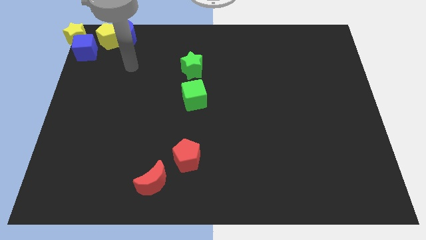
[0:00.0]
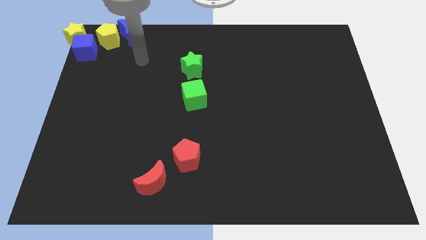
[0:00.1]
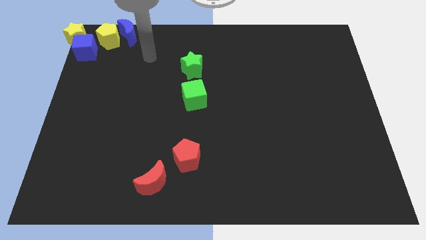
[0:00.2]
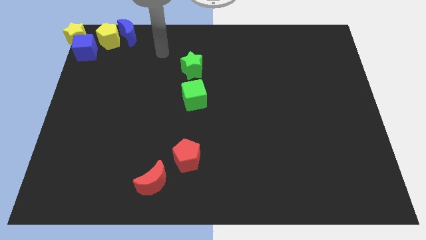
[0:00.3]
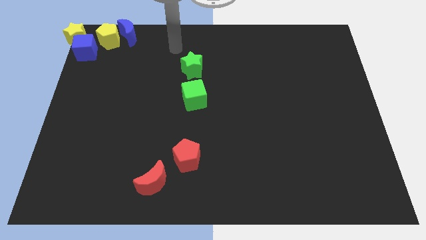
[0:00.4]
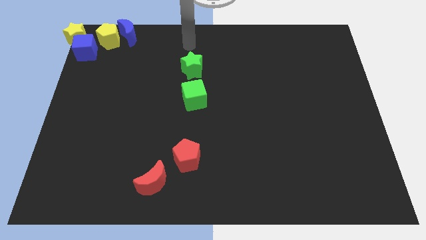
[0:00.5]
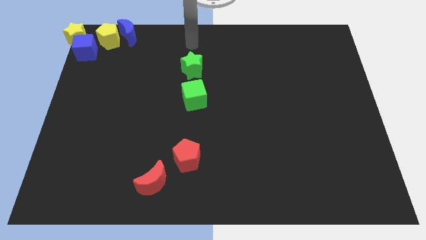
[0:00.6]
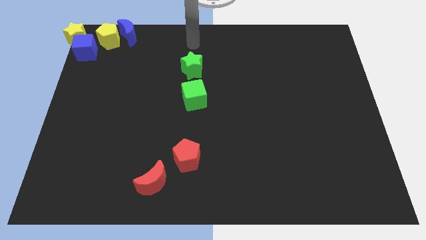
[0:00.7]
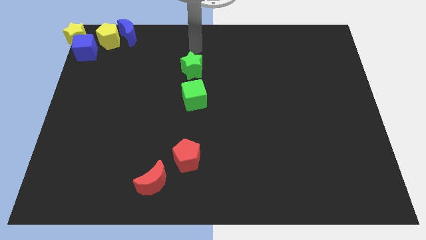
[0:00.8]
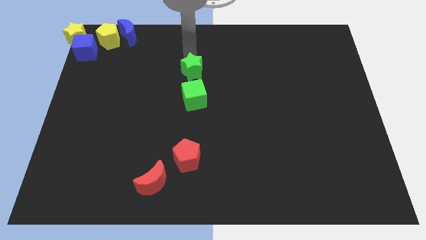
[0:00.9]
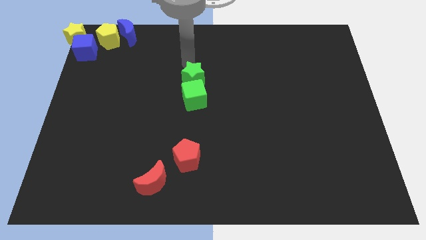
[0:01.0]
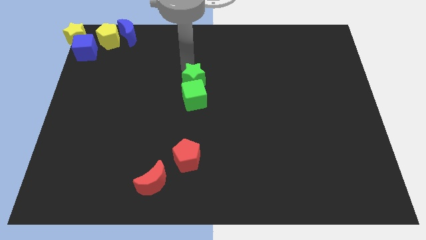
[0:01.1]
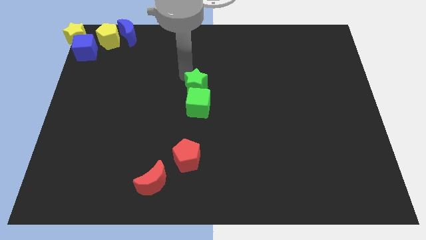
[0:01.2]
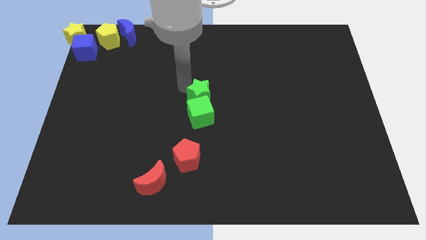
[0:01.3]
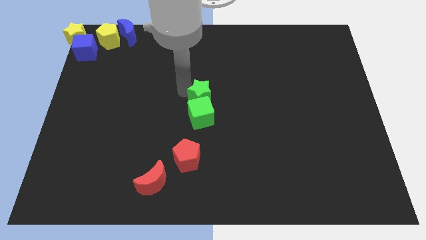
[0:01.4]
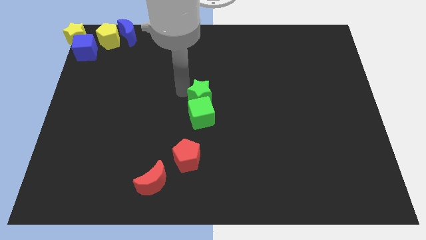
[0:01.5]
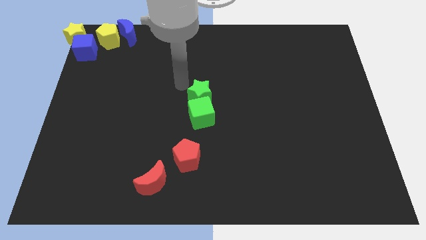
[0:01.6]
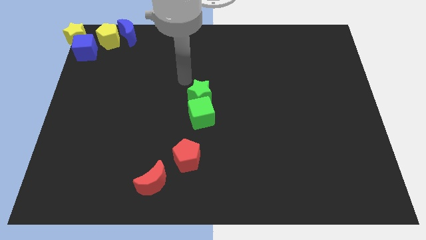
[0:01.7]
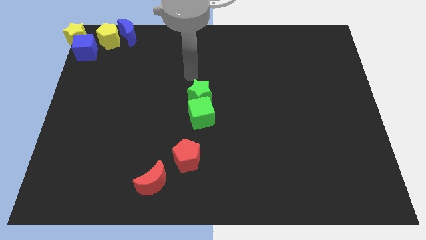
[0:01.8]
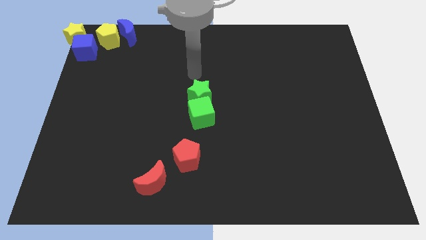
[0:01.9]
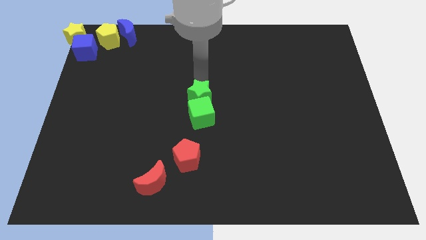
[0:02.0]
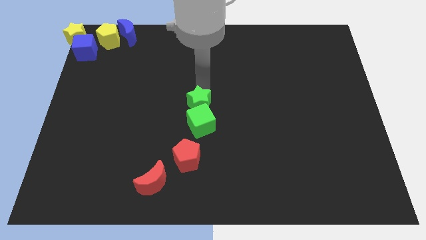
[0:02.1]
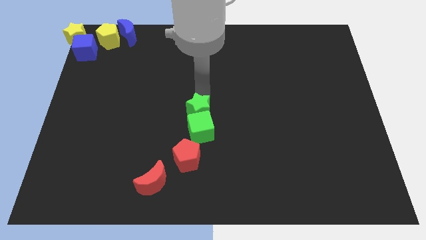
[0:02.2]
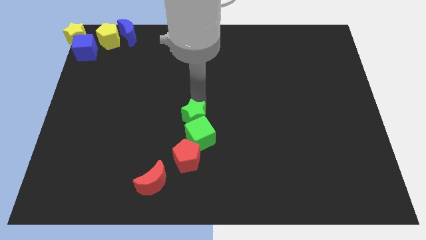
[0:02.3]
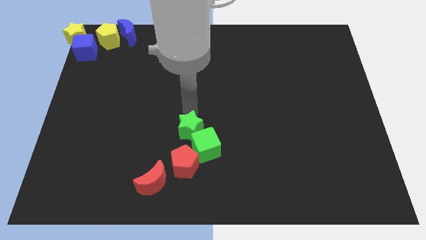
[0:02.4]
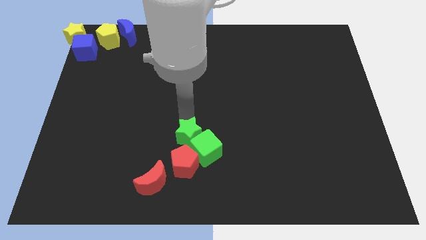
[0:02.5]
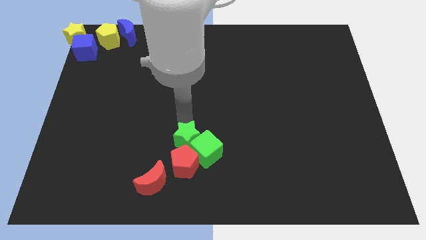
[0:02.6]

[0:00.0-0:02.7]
push green star towards red pentagon

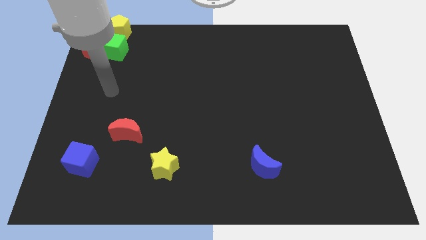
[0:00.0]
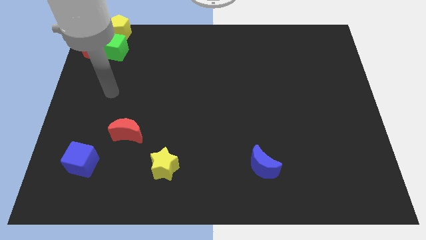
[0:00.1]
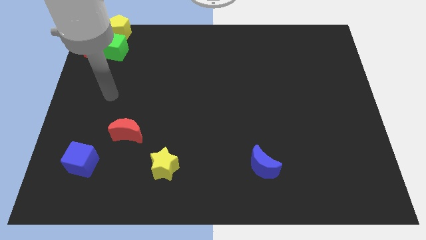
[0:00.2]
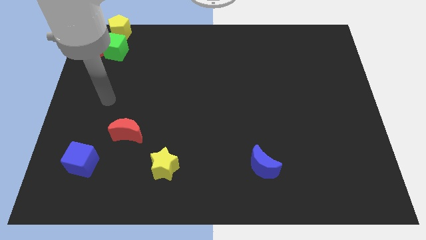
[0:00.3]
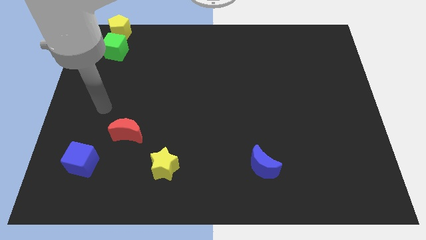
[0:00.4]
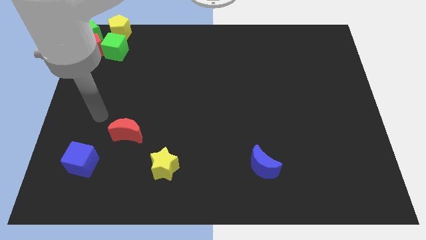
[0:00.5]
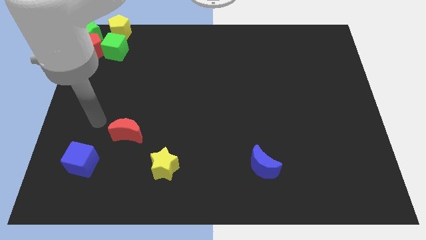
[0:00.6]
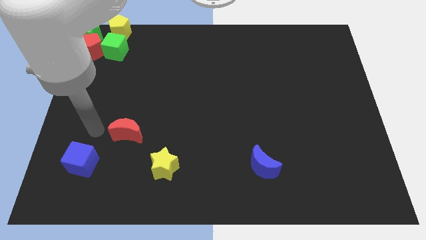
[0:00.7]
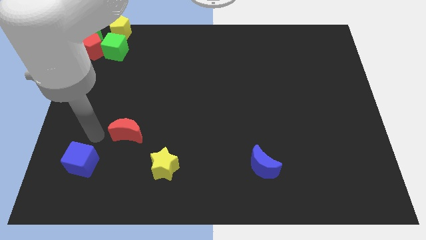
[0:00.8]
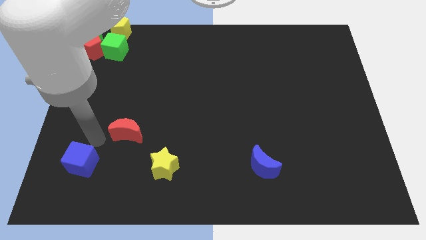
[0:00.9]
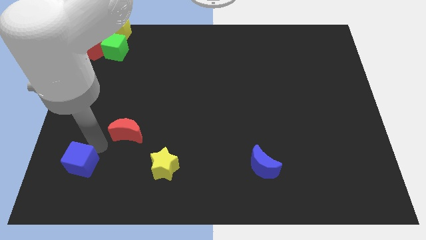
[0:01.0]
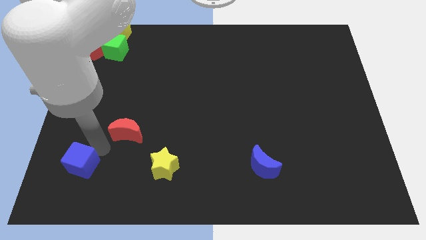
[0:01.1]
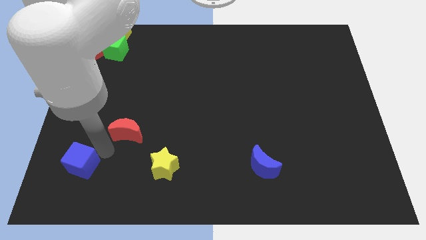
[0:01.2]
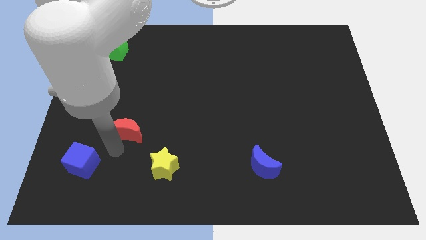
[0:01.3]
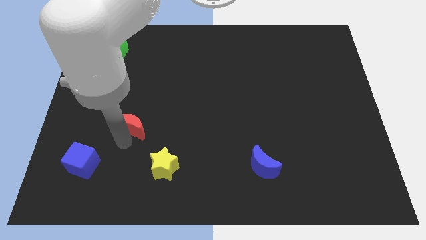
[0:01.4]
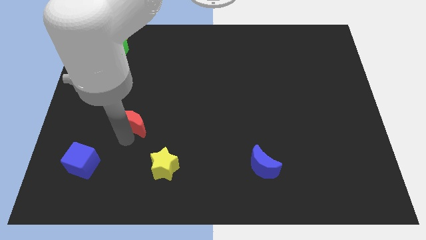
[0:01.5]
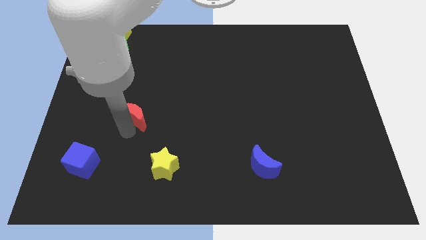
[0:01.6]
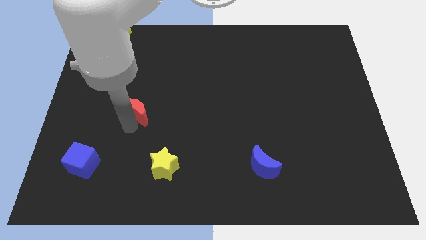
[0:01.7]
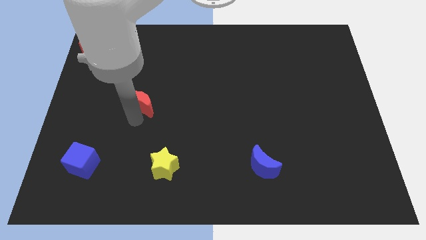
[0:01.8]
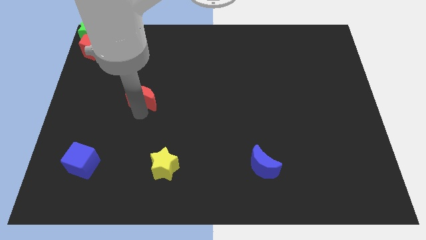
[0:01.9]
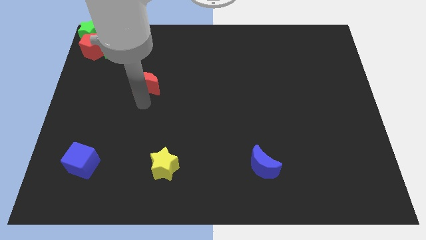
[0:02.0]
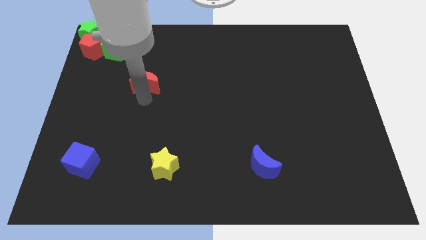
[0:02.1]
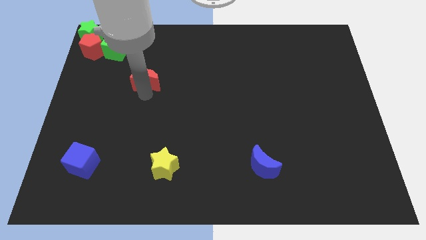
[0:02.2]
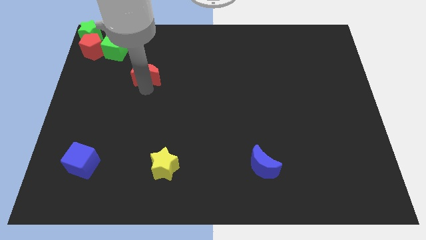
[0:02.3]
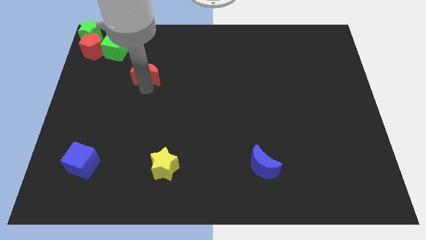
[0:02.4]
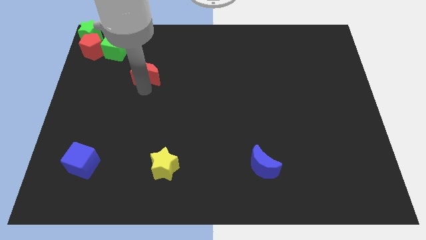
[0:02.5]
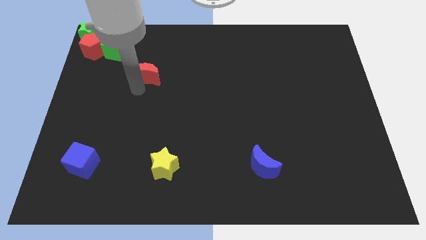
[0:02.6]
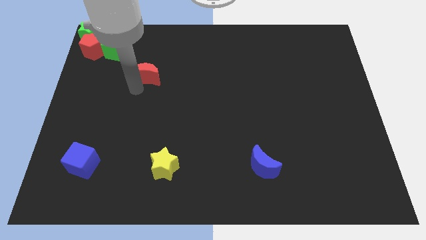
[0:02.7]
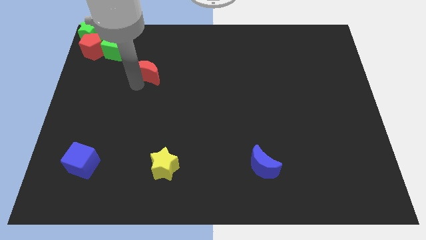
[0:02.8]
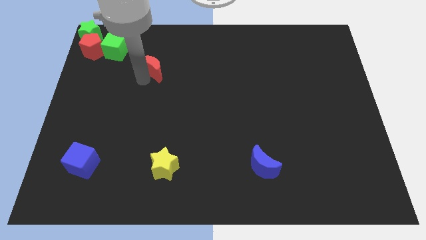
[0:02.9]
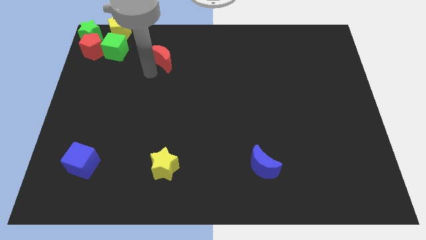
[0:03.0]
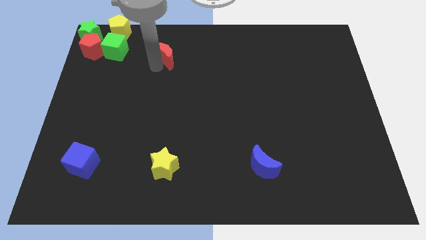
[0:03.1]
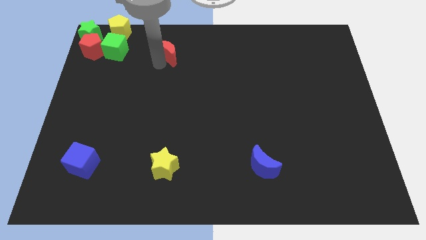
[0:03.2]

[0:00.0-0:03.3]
place the red moon at the right side of the green cube

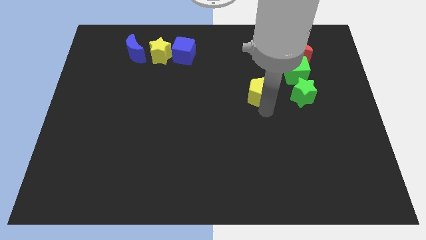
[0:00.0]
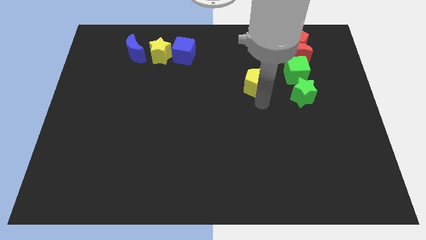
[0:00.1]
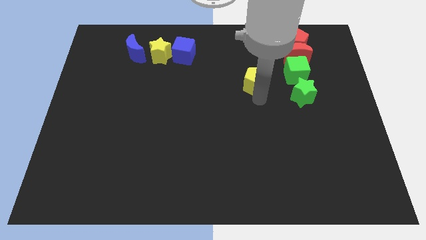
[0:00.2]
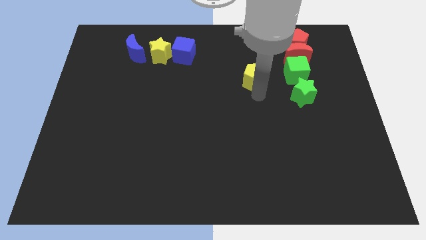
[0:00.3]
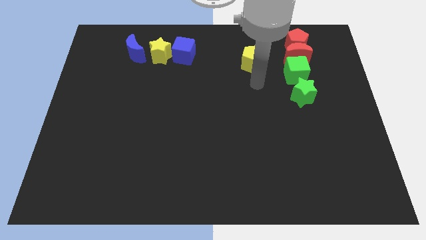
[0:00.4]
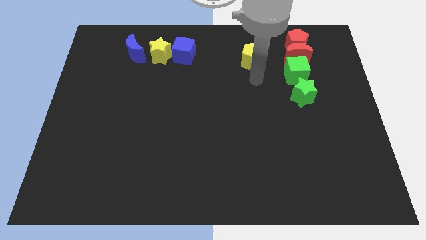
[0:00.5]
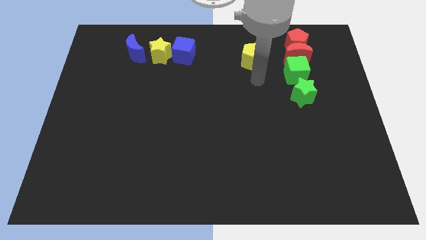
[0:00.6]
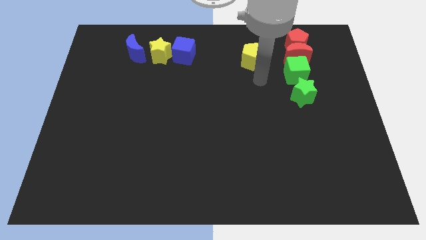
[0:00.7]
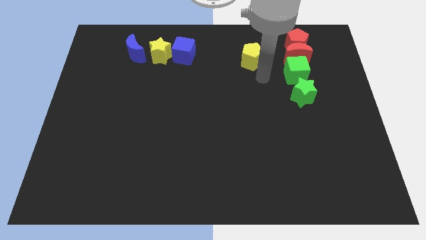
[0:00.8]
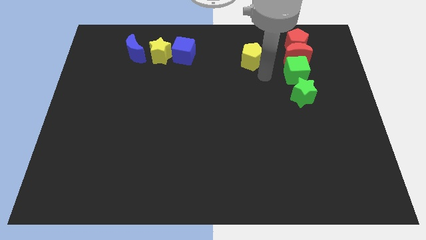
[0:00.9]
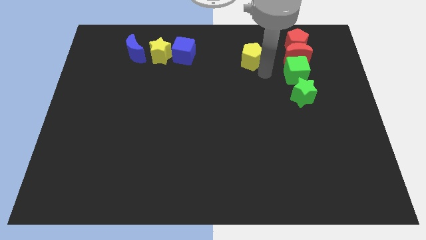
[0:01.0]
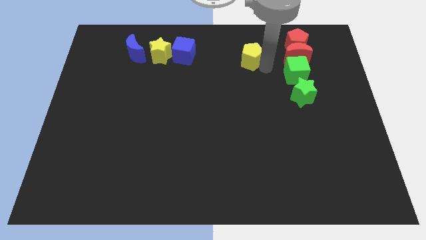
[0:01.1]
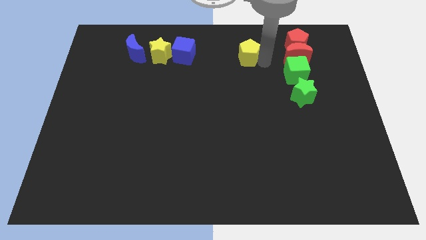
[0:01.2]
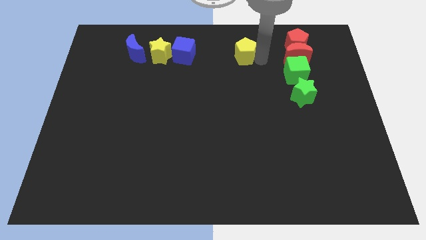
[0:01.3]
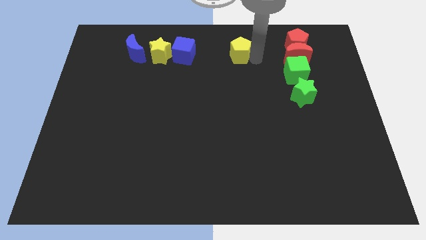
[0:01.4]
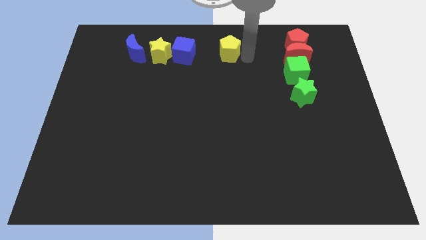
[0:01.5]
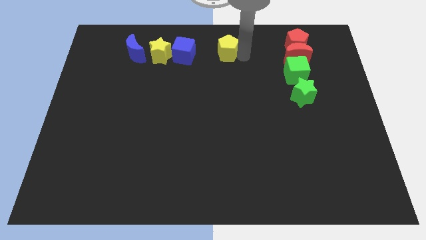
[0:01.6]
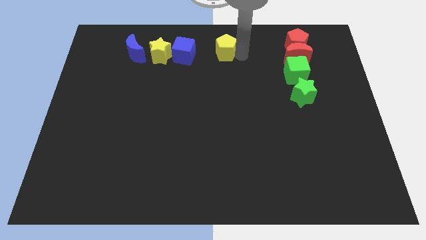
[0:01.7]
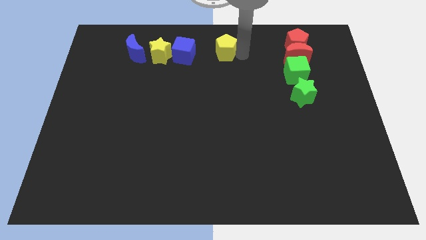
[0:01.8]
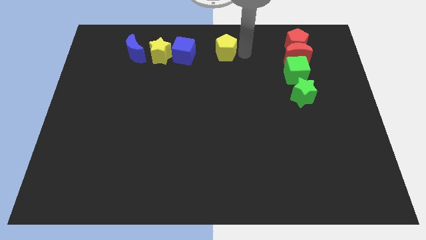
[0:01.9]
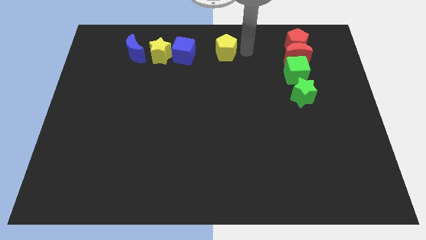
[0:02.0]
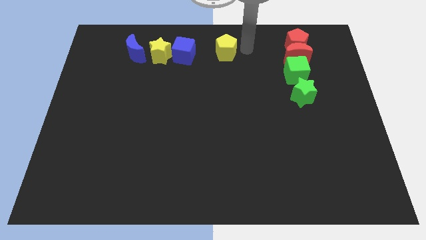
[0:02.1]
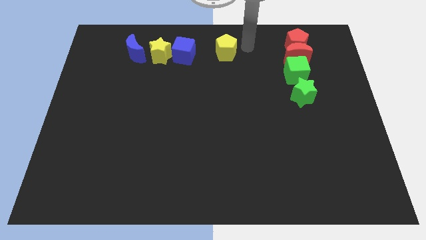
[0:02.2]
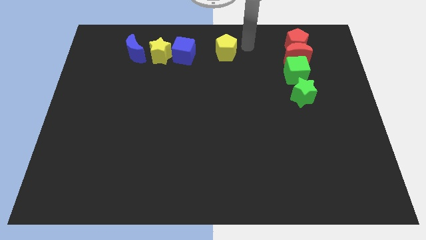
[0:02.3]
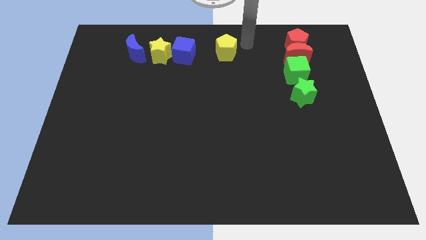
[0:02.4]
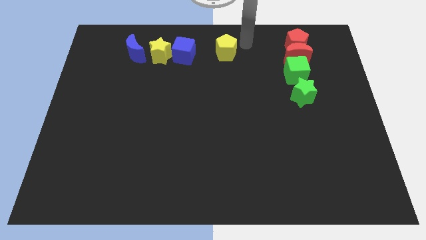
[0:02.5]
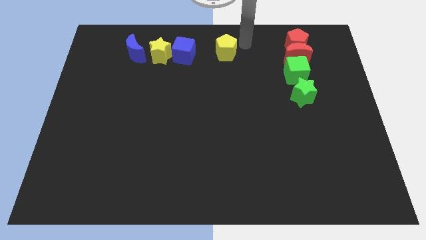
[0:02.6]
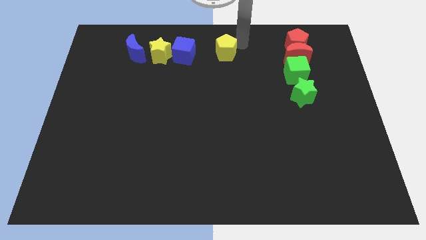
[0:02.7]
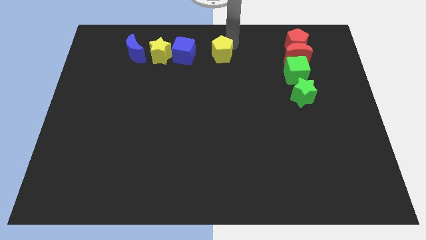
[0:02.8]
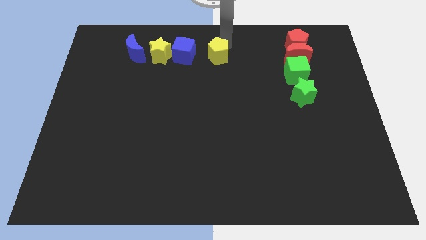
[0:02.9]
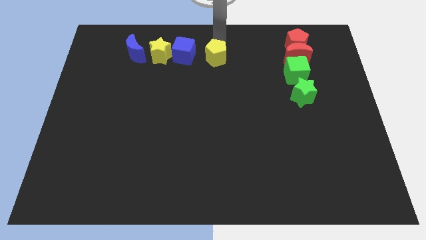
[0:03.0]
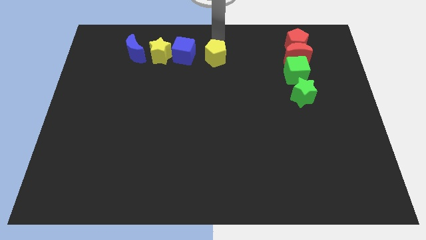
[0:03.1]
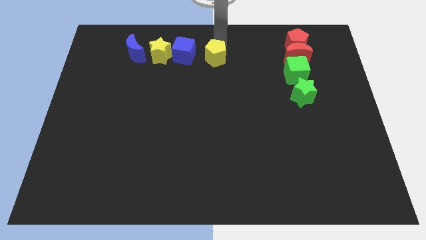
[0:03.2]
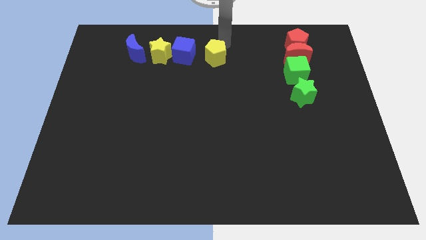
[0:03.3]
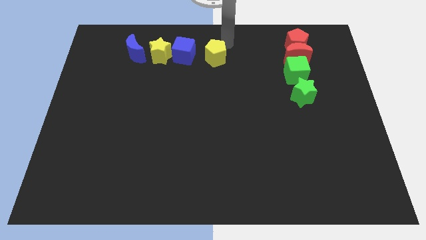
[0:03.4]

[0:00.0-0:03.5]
push the yellow pentagon near to the right side of the blue cube
